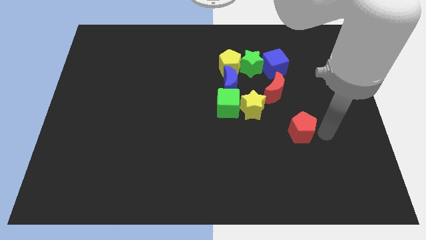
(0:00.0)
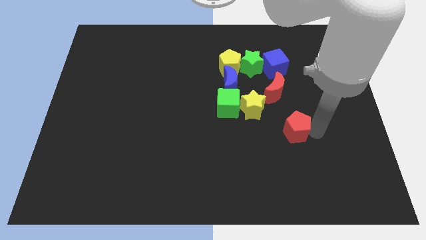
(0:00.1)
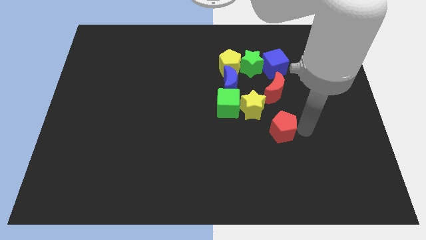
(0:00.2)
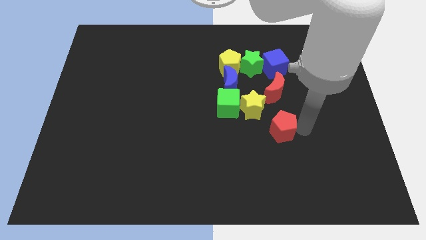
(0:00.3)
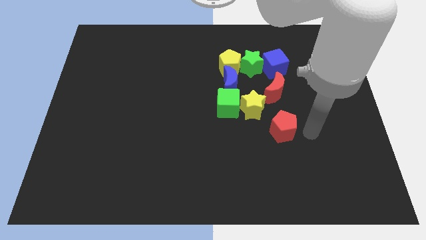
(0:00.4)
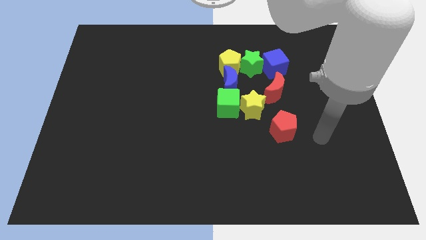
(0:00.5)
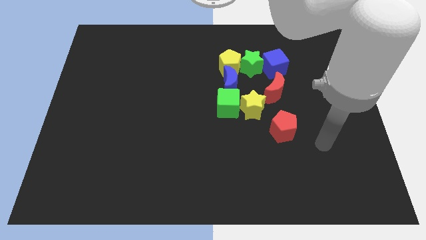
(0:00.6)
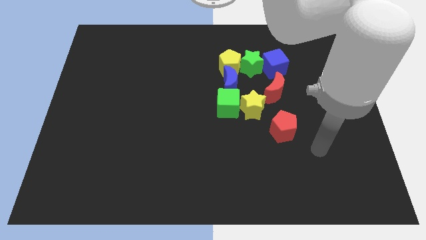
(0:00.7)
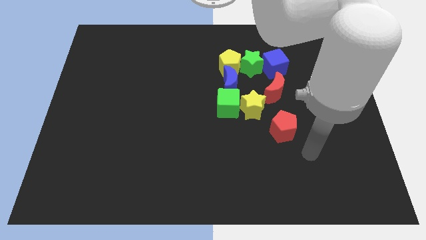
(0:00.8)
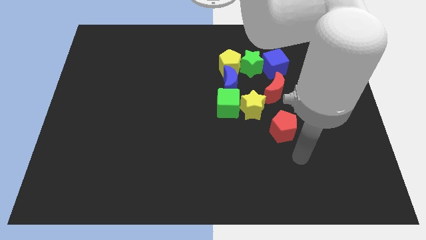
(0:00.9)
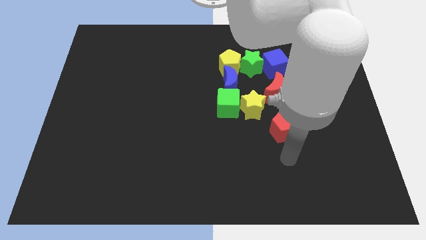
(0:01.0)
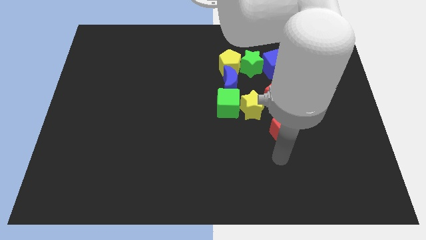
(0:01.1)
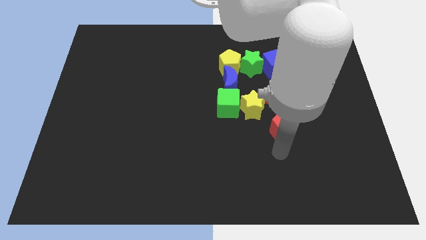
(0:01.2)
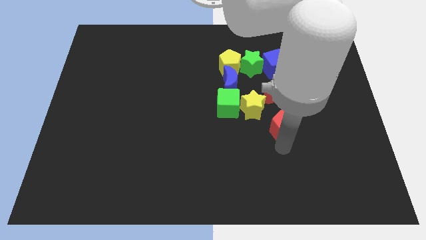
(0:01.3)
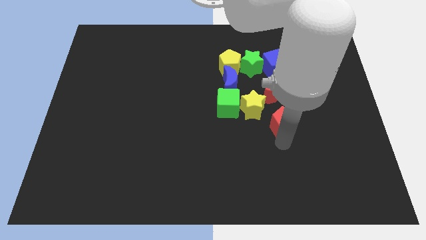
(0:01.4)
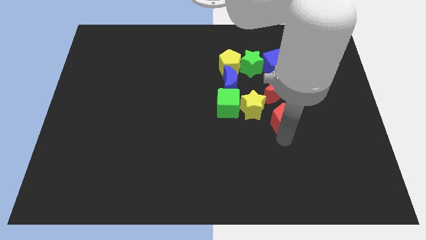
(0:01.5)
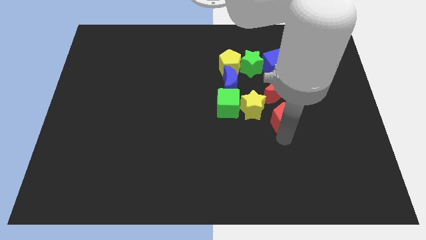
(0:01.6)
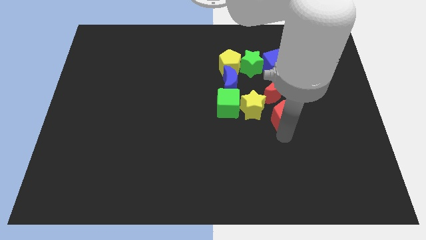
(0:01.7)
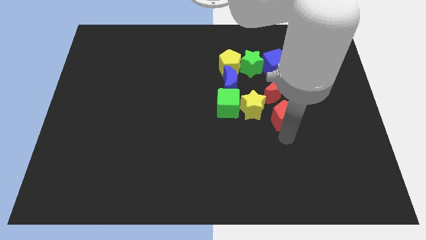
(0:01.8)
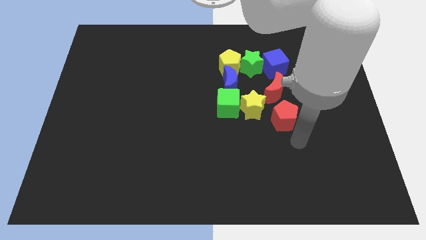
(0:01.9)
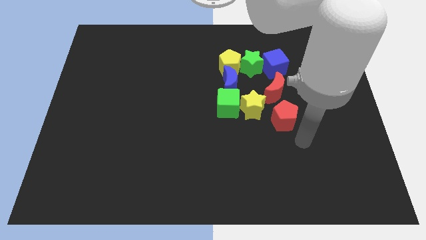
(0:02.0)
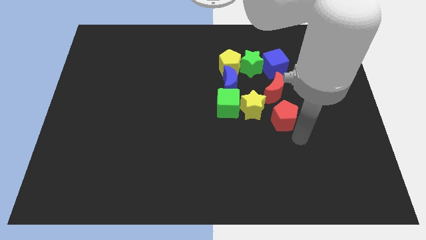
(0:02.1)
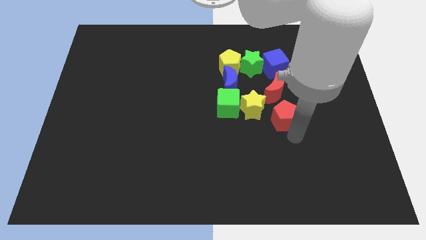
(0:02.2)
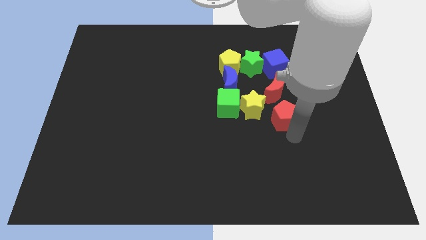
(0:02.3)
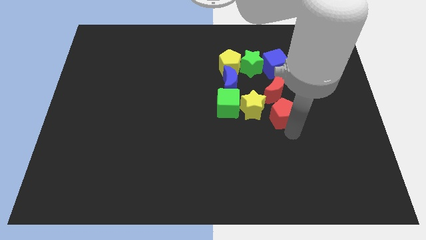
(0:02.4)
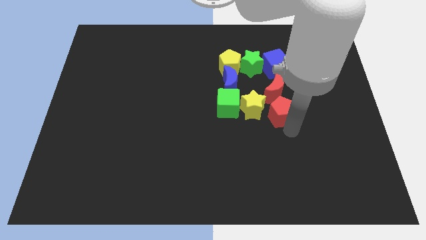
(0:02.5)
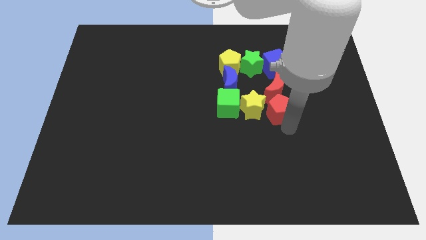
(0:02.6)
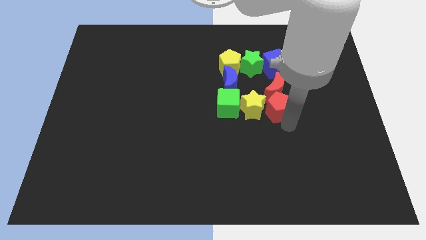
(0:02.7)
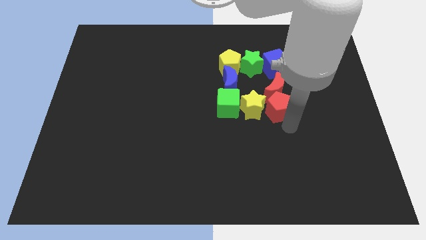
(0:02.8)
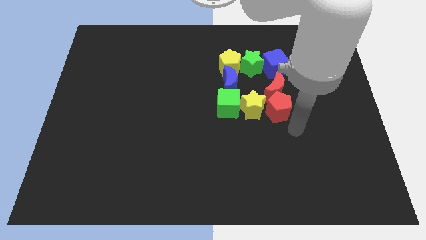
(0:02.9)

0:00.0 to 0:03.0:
push the red pentagon to the bottom of the red crescent

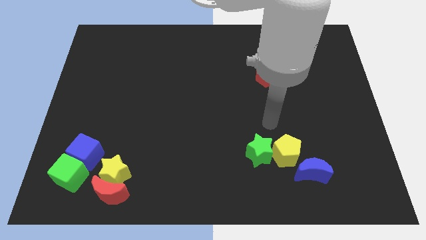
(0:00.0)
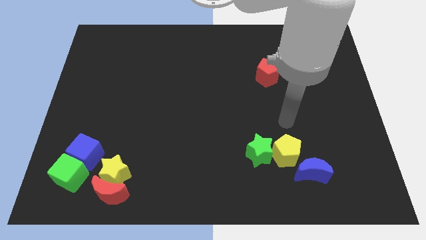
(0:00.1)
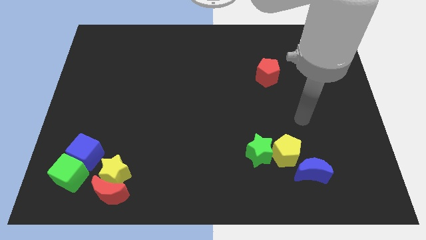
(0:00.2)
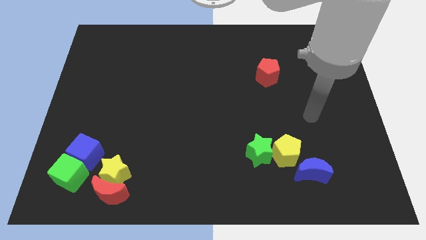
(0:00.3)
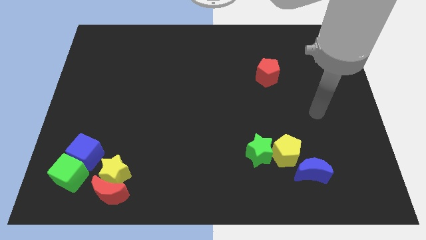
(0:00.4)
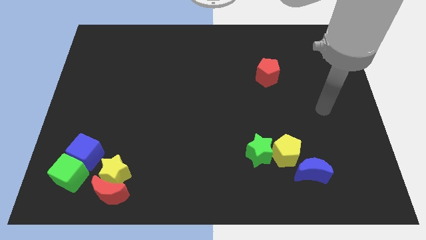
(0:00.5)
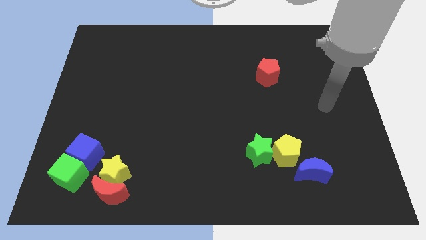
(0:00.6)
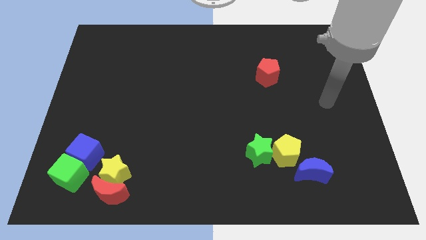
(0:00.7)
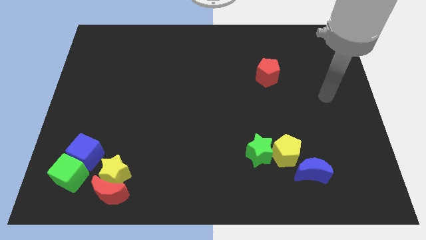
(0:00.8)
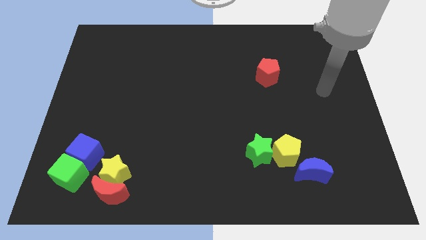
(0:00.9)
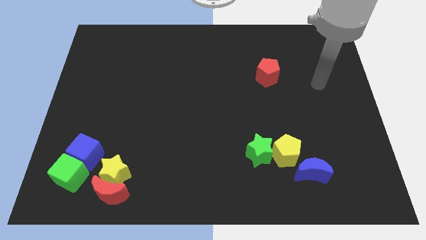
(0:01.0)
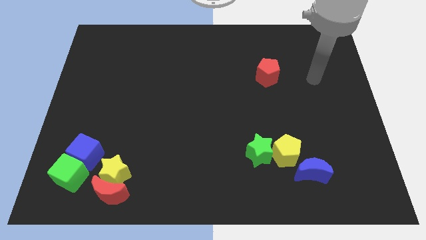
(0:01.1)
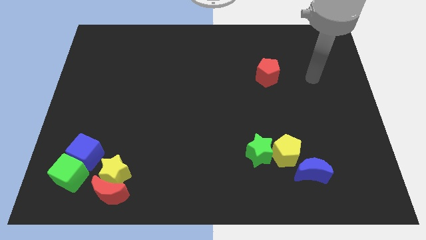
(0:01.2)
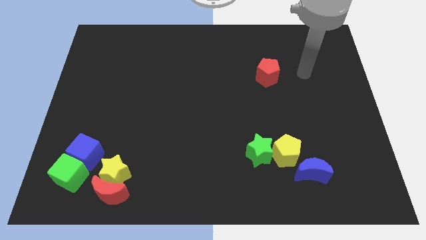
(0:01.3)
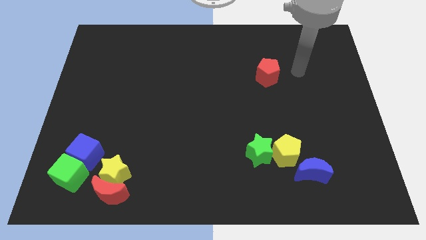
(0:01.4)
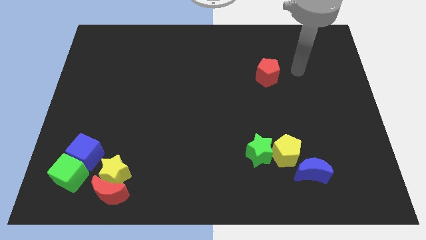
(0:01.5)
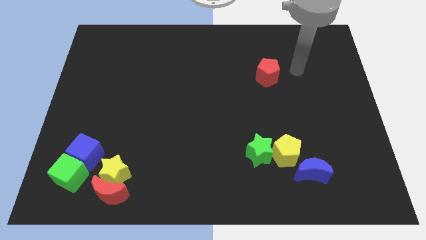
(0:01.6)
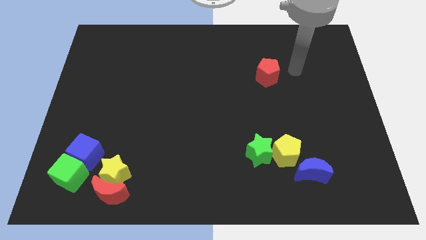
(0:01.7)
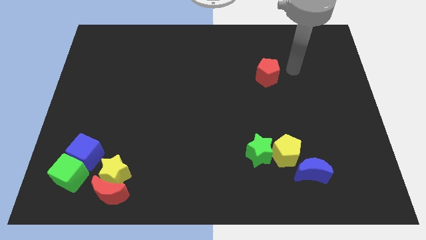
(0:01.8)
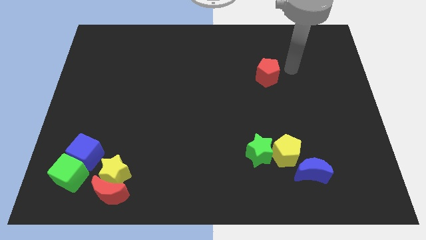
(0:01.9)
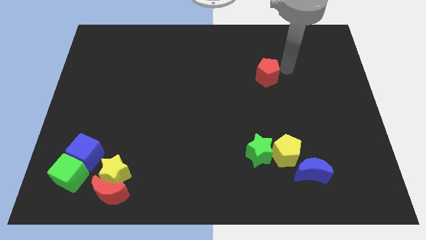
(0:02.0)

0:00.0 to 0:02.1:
point your arm at the right side of the red pentagon

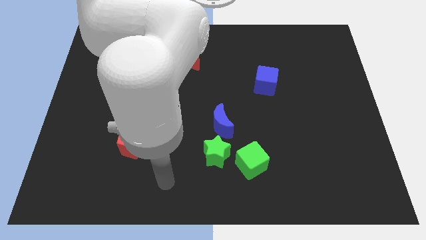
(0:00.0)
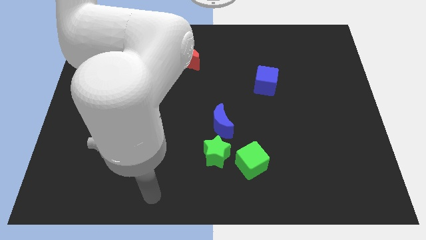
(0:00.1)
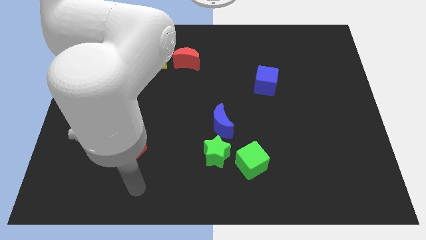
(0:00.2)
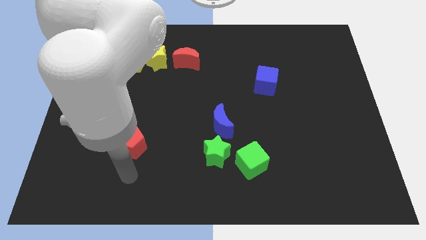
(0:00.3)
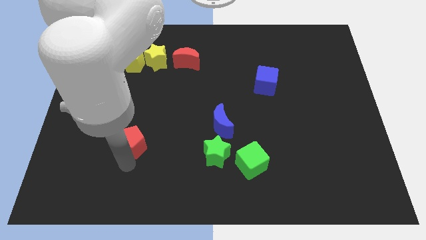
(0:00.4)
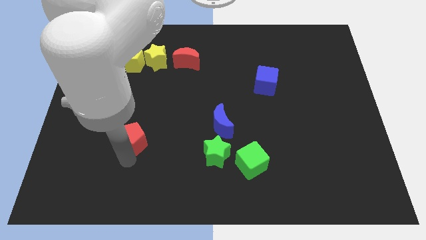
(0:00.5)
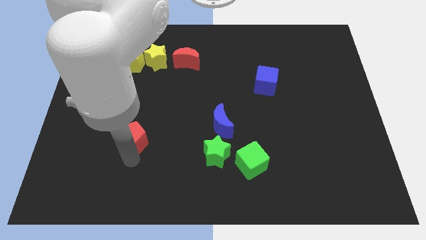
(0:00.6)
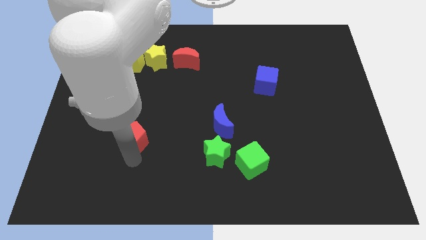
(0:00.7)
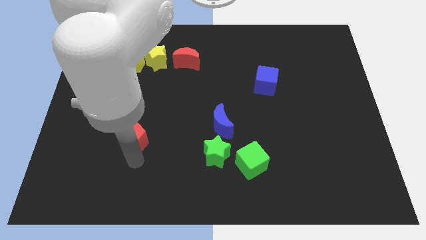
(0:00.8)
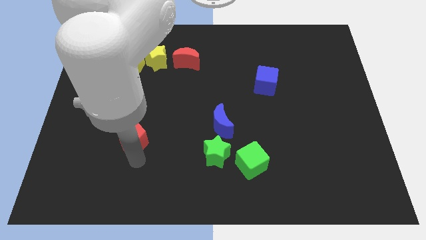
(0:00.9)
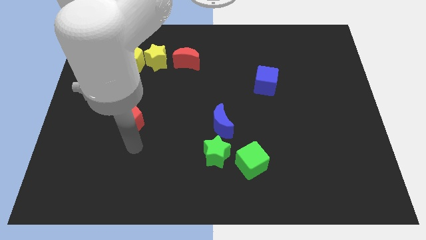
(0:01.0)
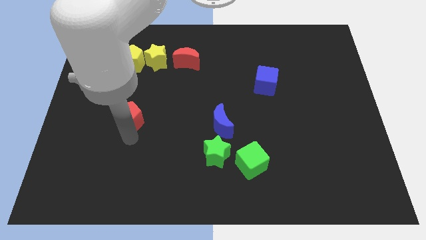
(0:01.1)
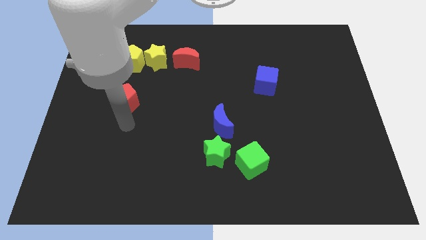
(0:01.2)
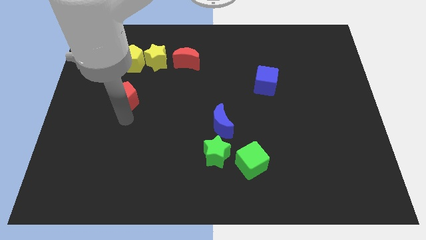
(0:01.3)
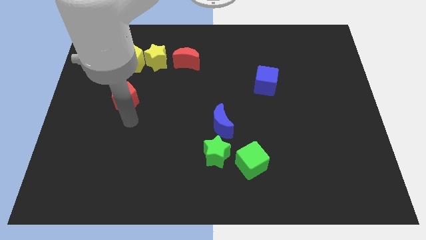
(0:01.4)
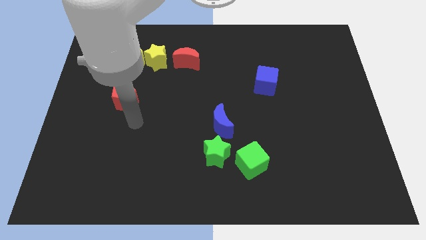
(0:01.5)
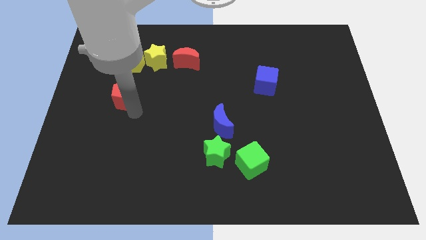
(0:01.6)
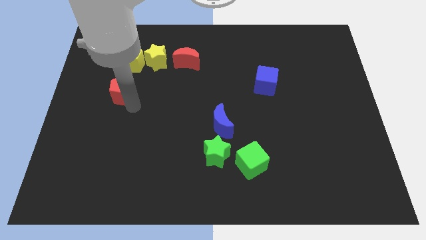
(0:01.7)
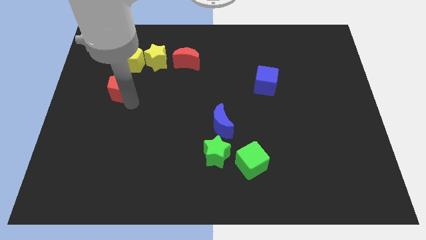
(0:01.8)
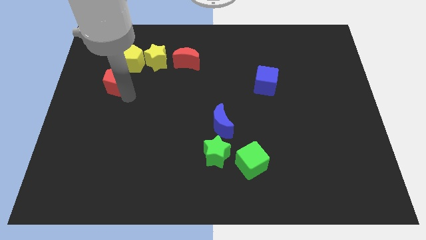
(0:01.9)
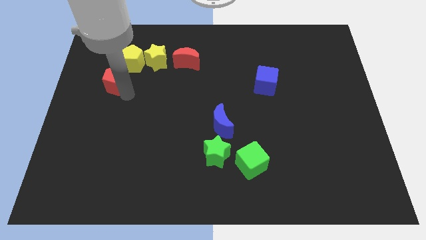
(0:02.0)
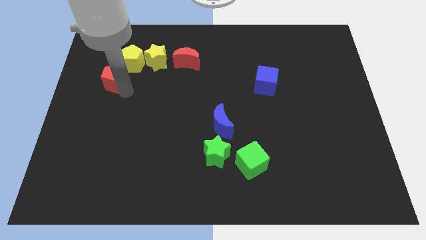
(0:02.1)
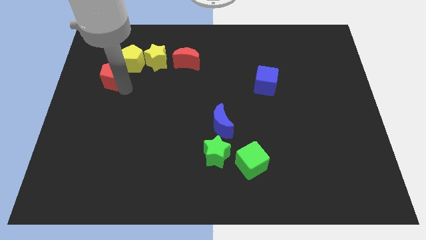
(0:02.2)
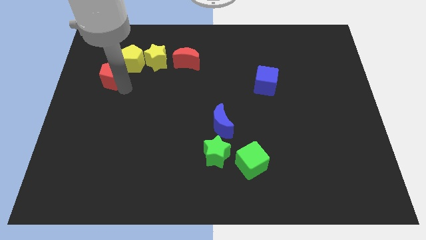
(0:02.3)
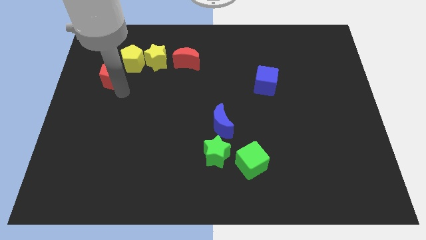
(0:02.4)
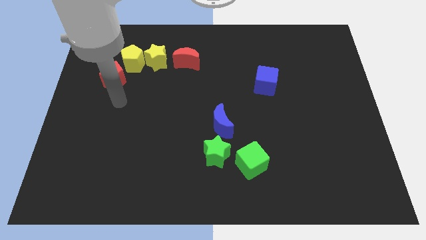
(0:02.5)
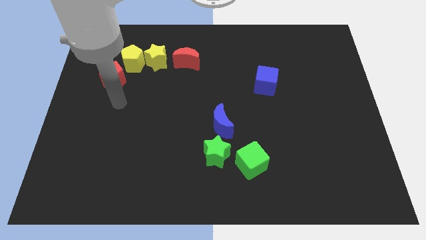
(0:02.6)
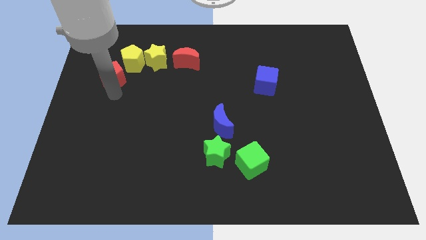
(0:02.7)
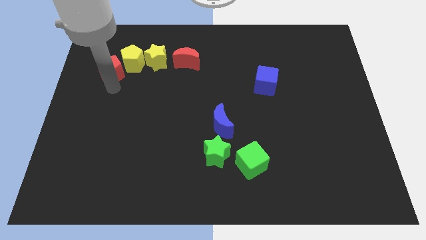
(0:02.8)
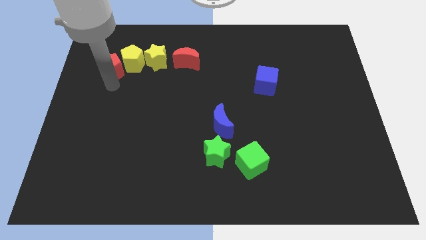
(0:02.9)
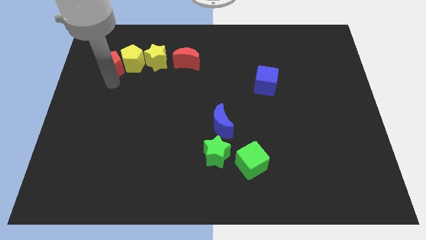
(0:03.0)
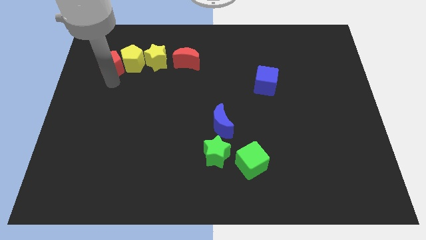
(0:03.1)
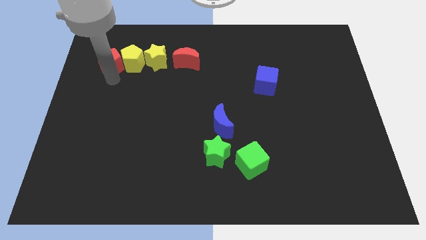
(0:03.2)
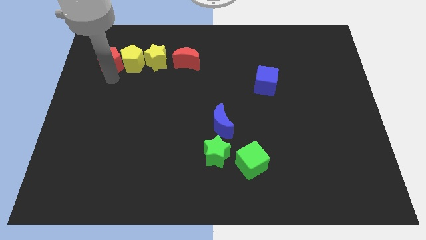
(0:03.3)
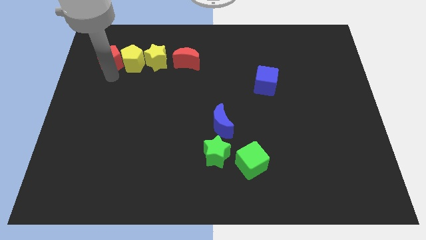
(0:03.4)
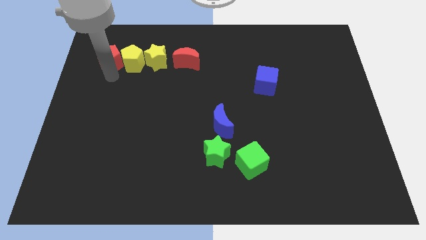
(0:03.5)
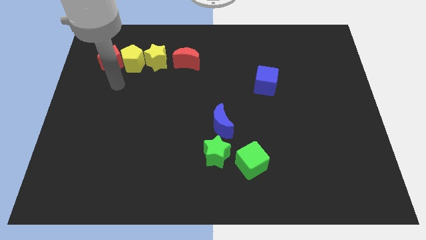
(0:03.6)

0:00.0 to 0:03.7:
move red pentagon left beside the yellow pentagon
